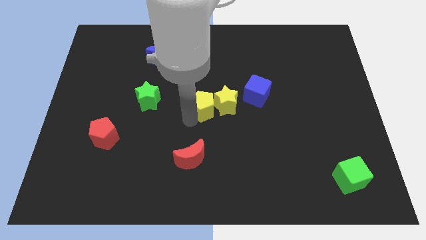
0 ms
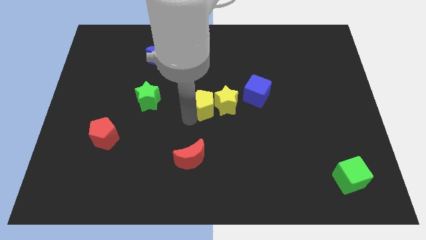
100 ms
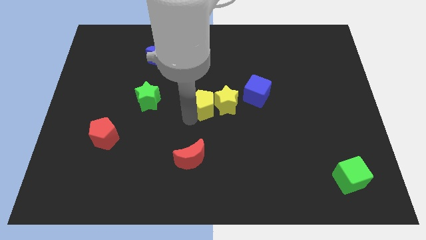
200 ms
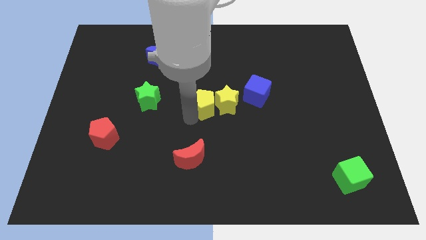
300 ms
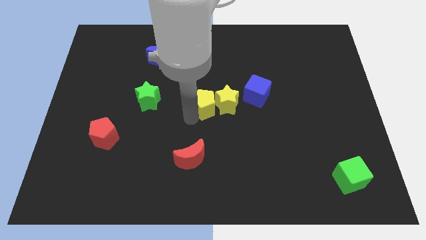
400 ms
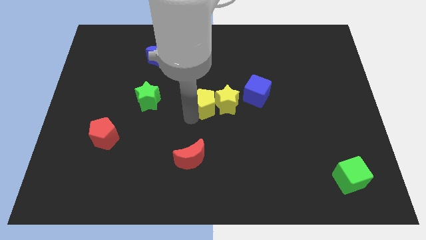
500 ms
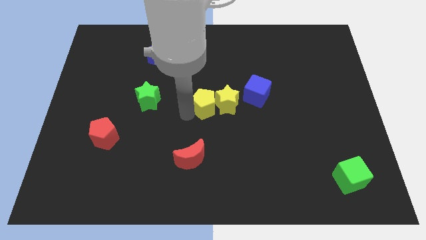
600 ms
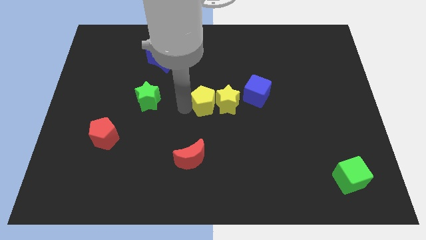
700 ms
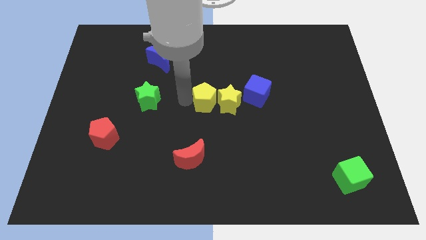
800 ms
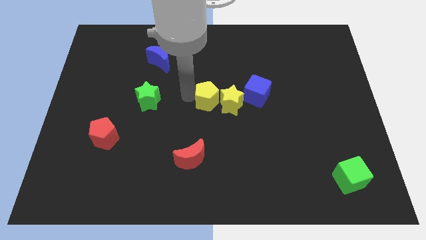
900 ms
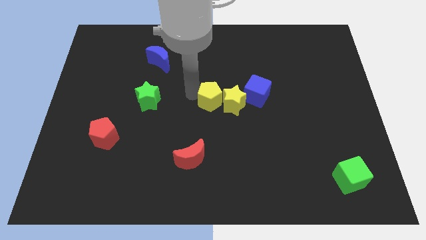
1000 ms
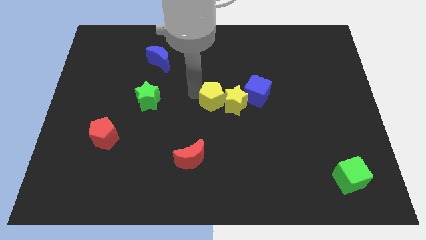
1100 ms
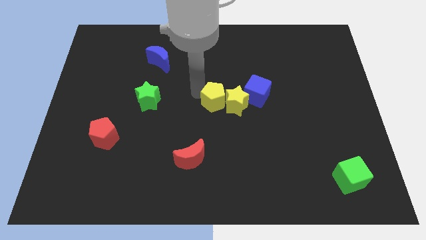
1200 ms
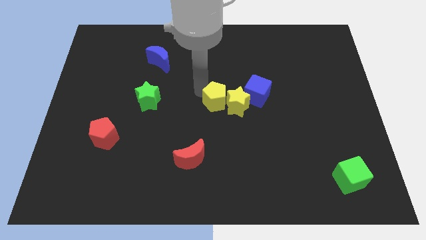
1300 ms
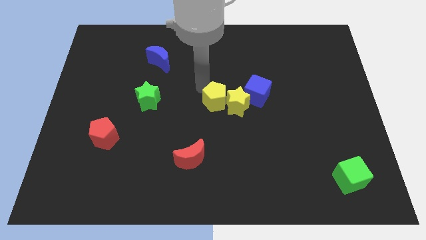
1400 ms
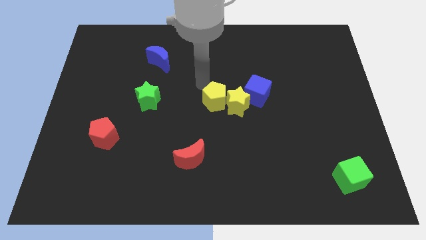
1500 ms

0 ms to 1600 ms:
push the yellow pentagon to the center of the board

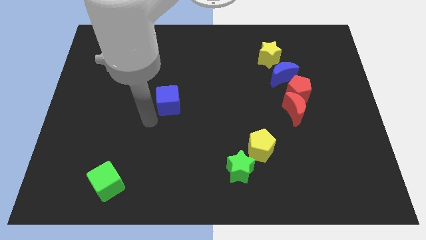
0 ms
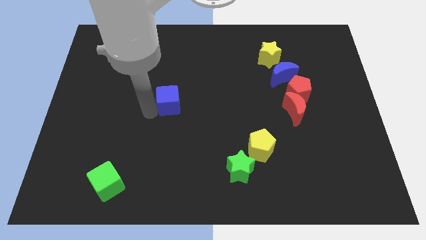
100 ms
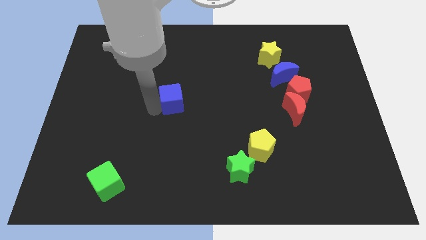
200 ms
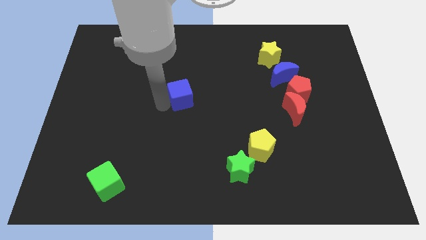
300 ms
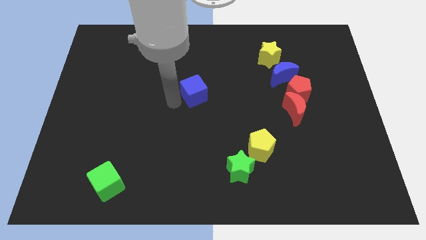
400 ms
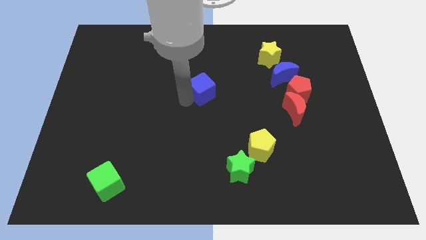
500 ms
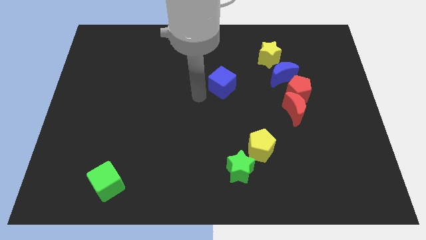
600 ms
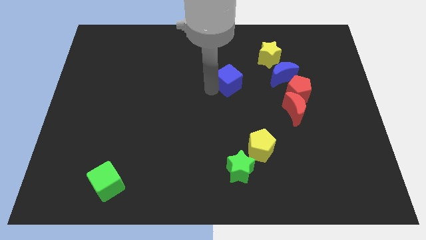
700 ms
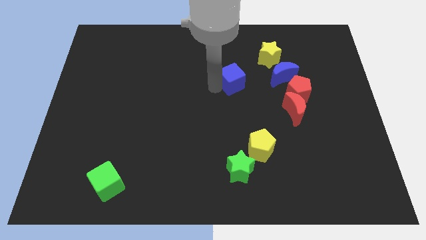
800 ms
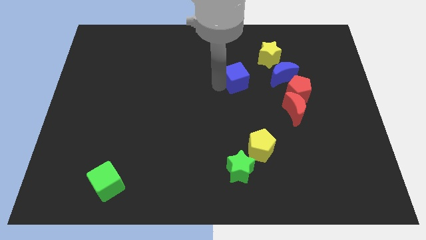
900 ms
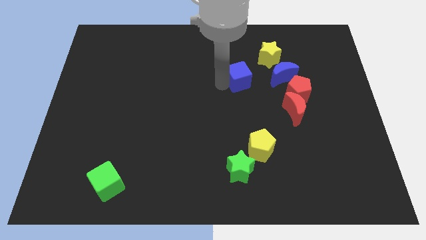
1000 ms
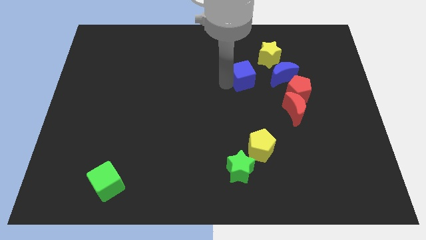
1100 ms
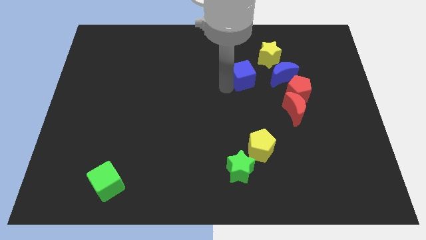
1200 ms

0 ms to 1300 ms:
move the cube slightly to the top right corner in a diagonal manner

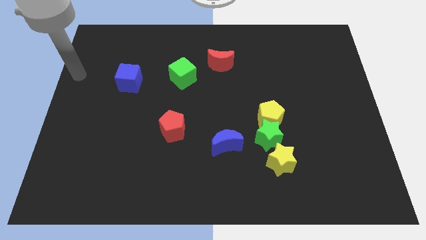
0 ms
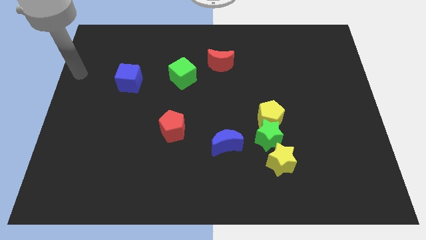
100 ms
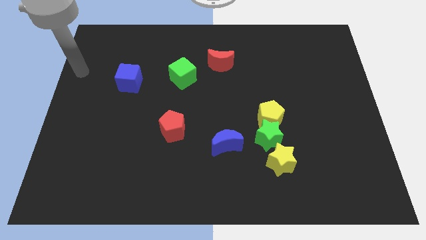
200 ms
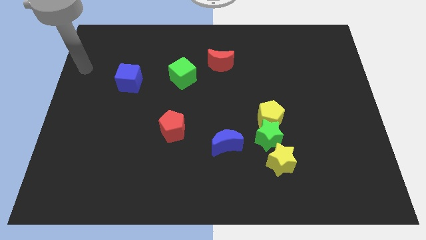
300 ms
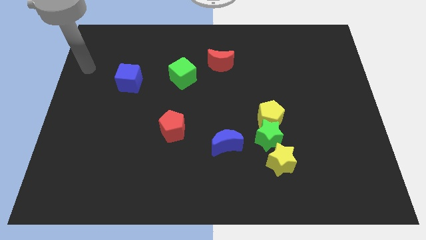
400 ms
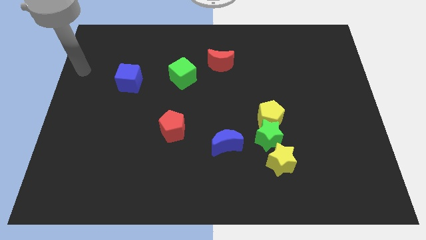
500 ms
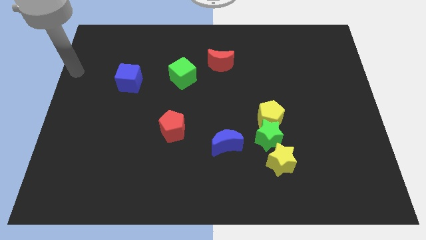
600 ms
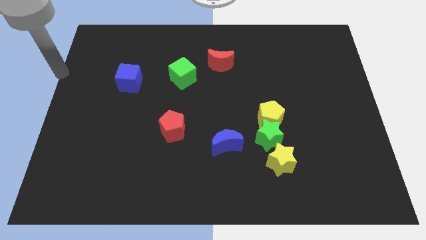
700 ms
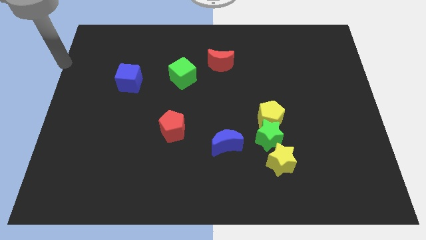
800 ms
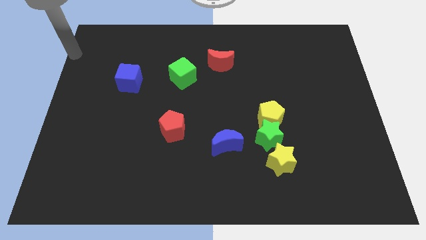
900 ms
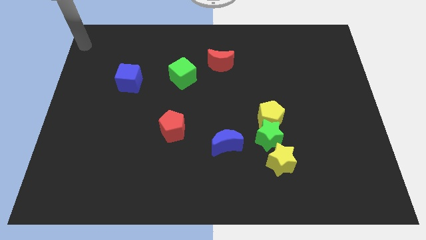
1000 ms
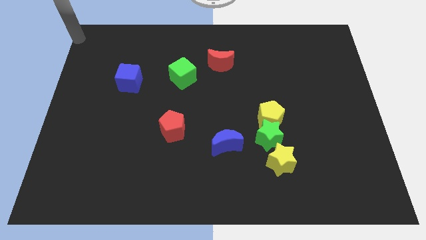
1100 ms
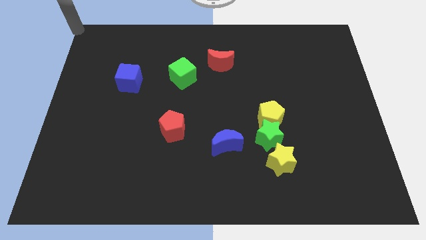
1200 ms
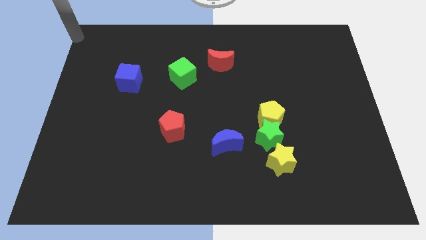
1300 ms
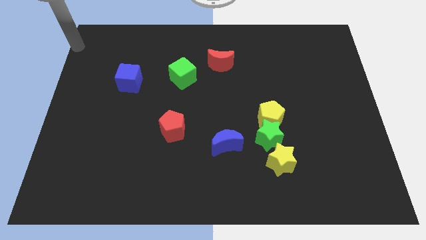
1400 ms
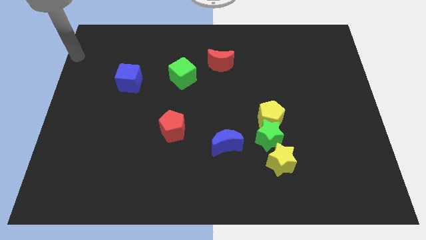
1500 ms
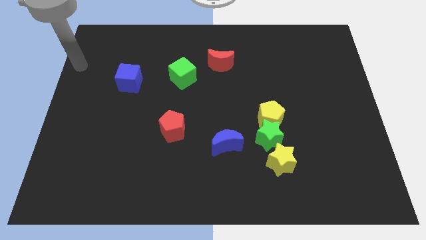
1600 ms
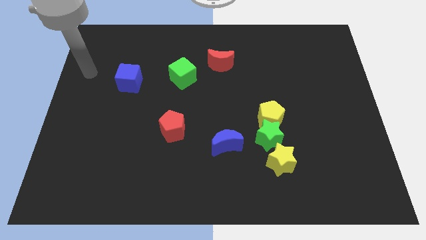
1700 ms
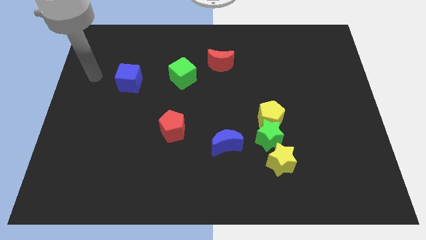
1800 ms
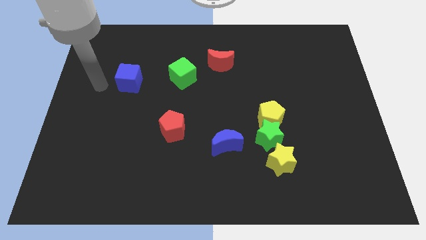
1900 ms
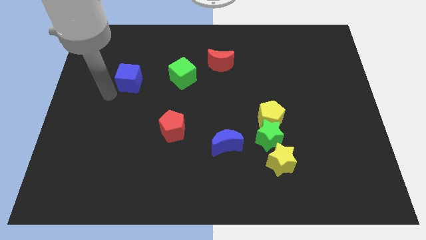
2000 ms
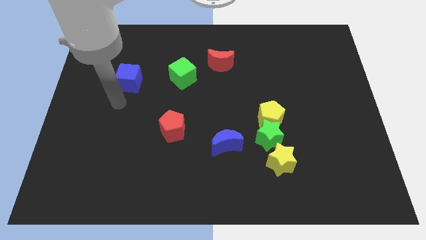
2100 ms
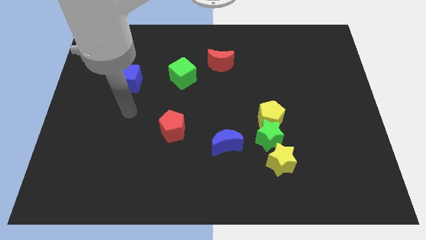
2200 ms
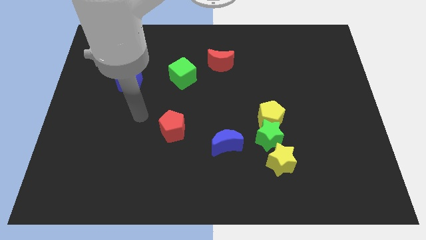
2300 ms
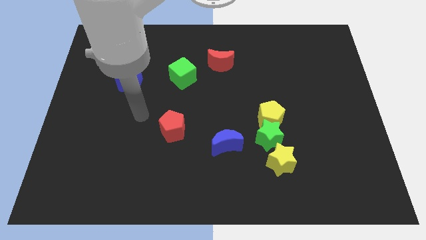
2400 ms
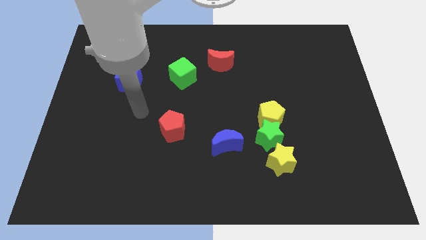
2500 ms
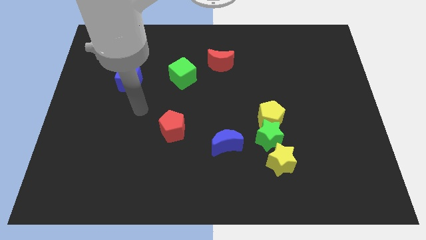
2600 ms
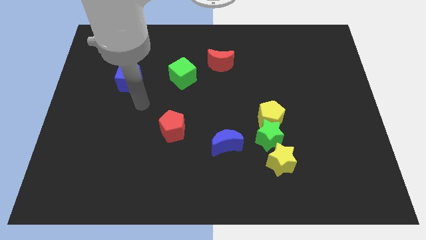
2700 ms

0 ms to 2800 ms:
move your arm towards the red pentagon

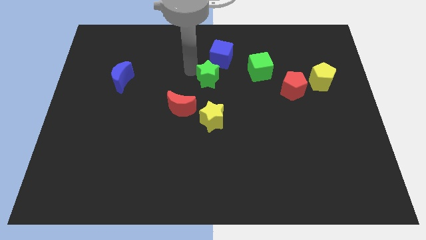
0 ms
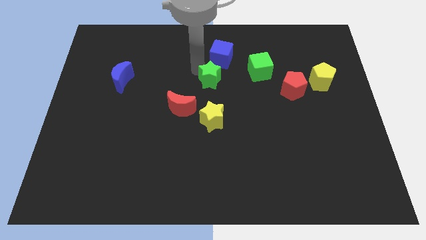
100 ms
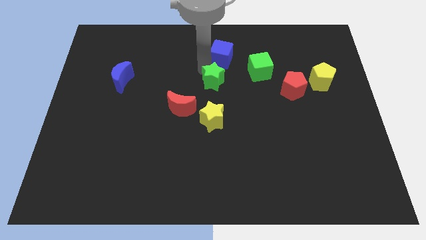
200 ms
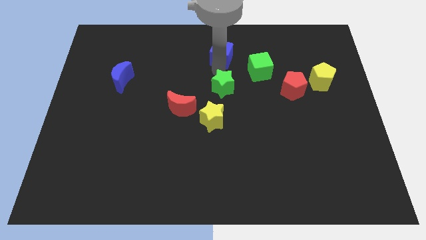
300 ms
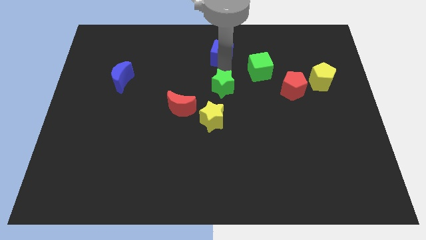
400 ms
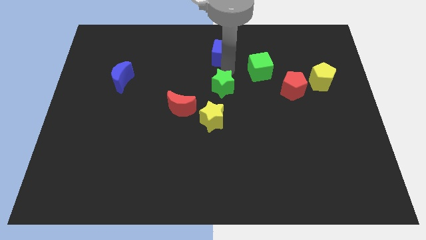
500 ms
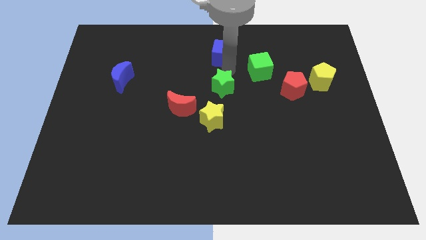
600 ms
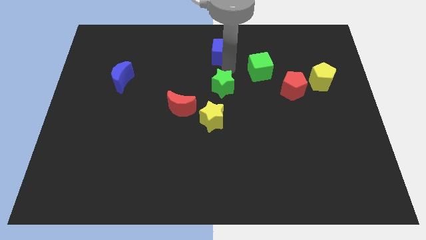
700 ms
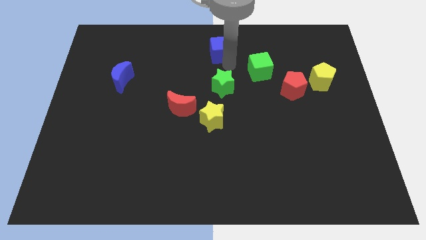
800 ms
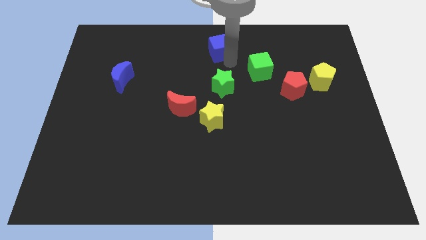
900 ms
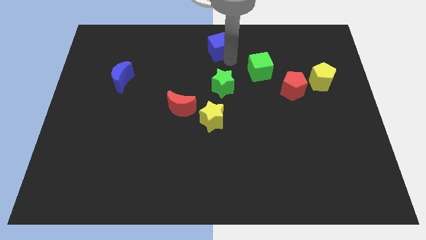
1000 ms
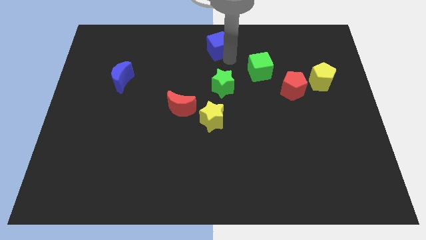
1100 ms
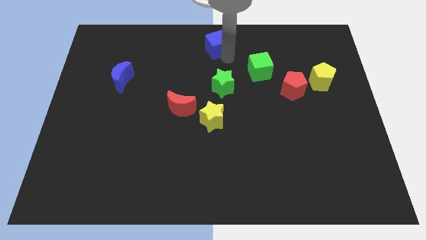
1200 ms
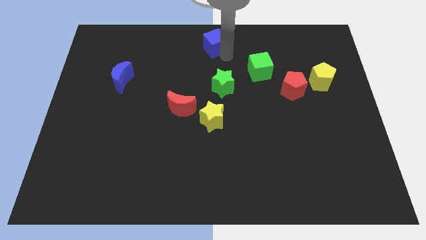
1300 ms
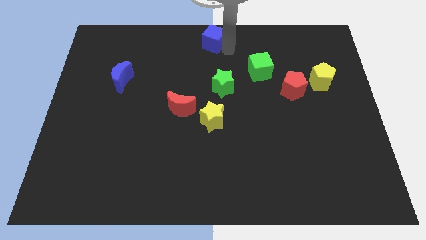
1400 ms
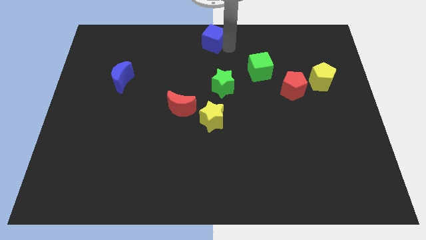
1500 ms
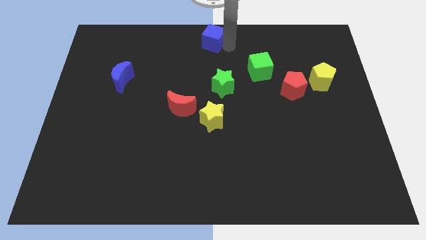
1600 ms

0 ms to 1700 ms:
push blue cube to the top center of the board

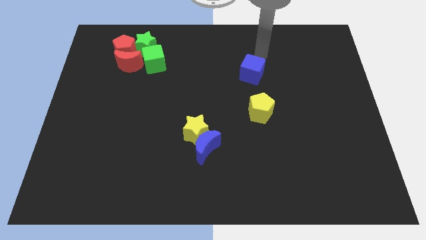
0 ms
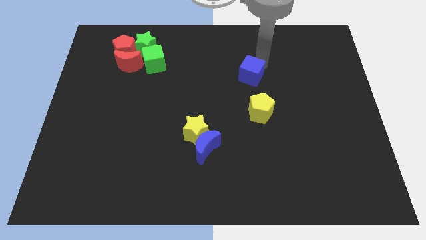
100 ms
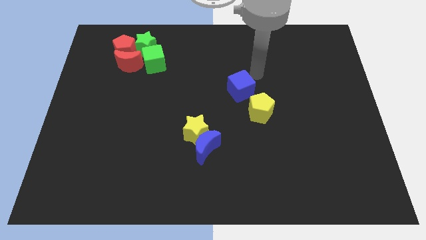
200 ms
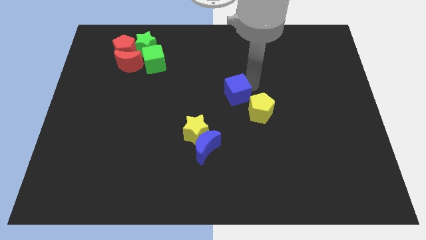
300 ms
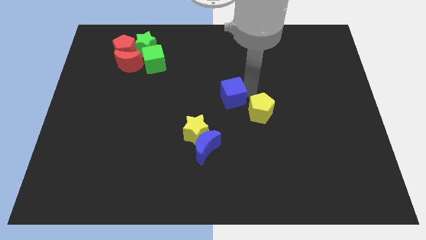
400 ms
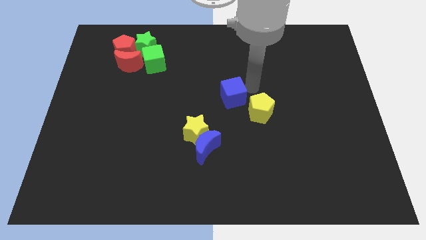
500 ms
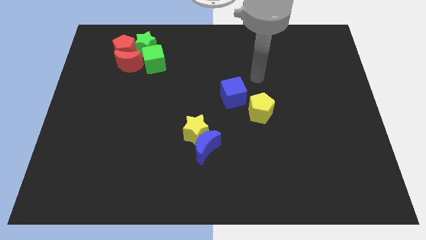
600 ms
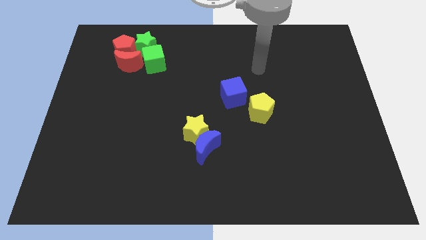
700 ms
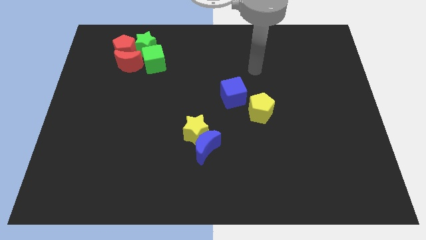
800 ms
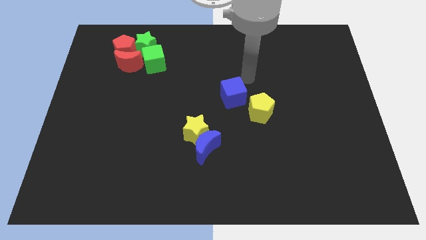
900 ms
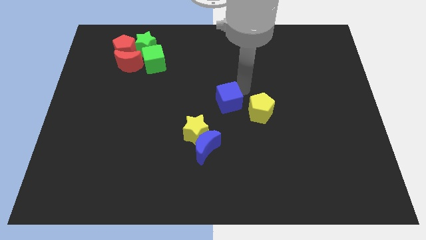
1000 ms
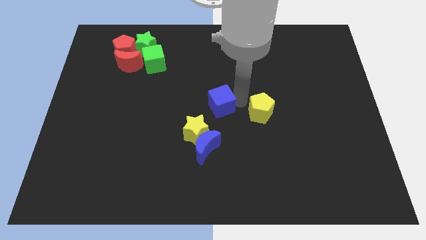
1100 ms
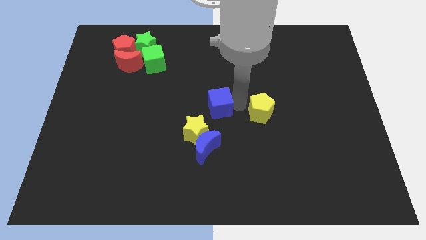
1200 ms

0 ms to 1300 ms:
place the blue cube to the left of the yellow pentagon
